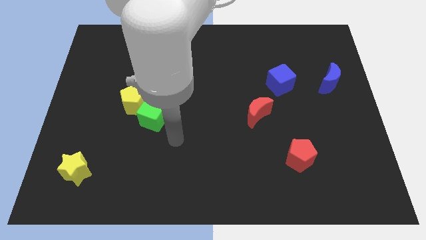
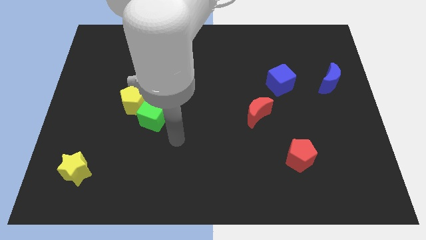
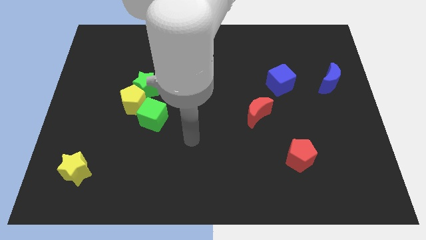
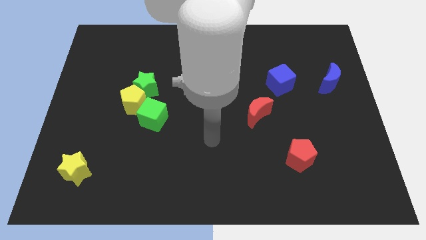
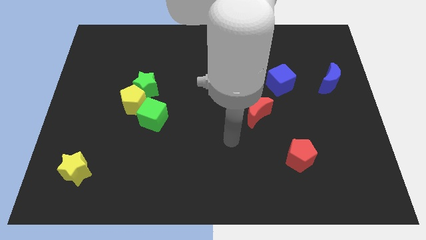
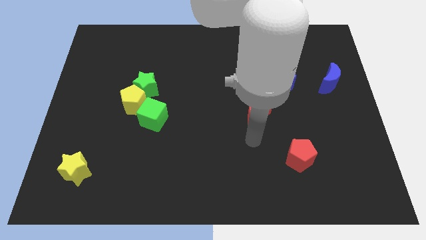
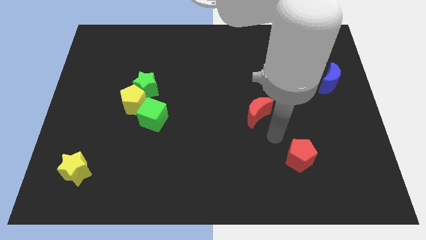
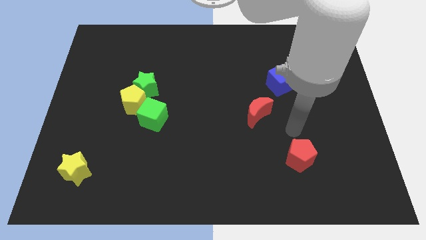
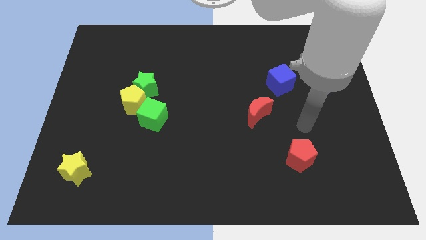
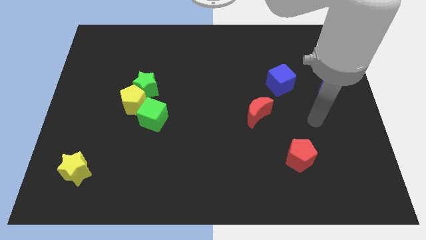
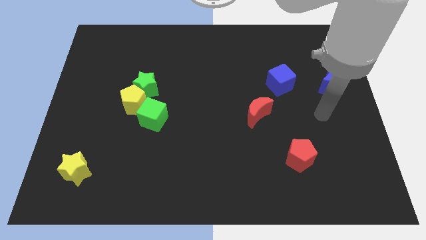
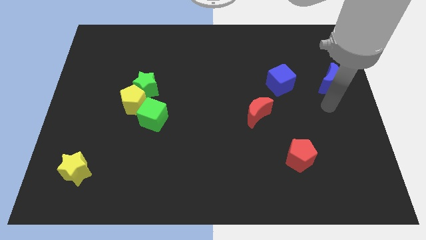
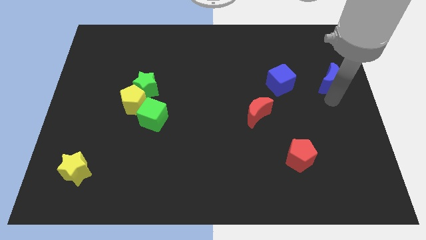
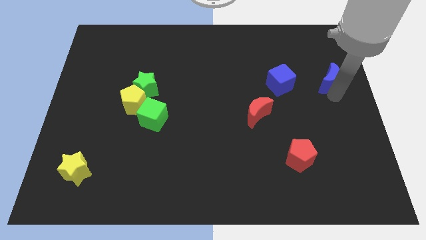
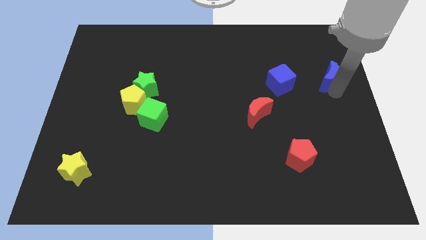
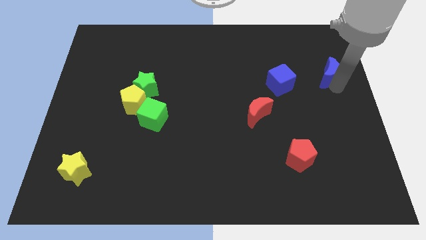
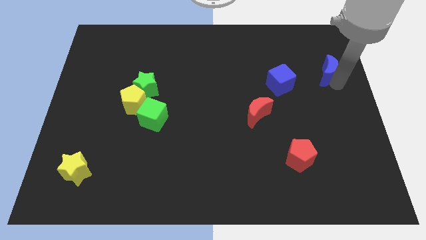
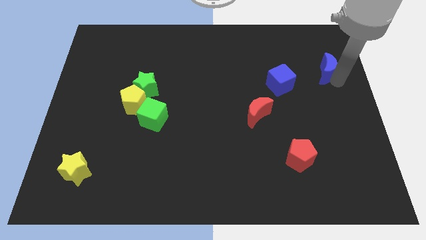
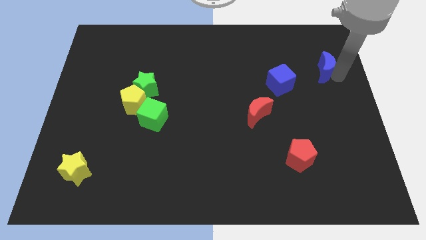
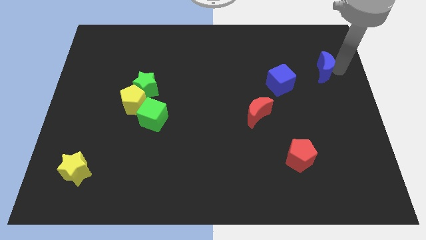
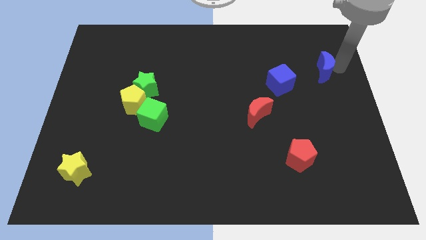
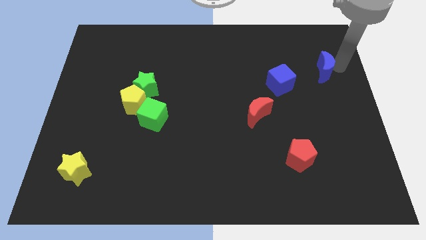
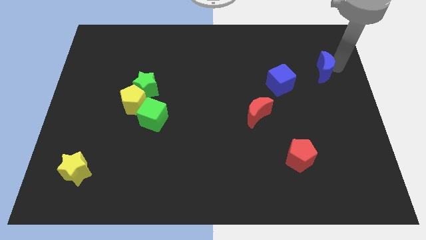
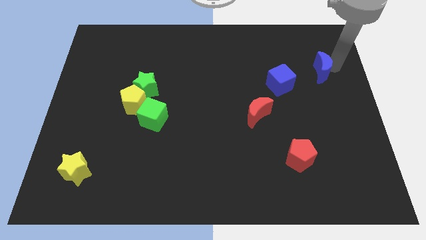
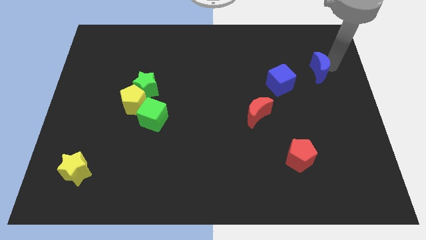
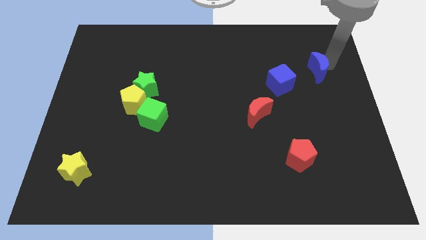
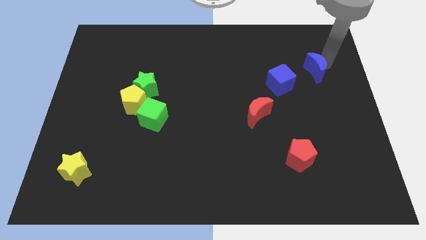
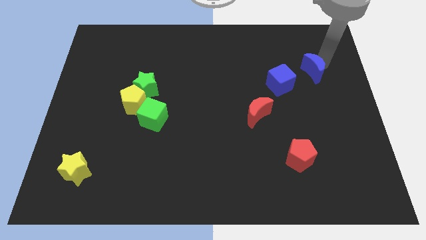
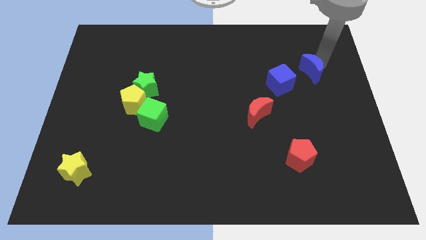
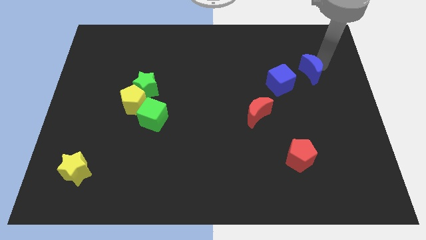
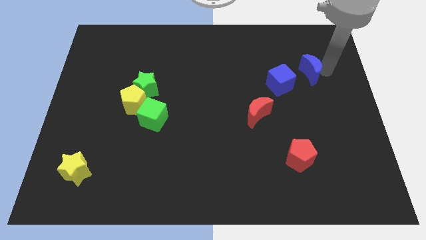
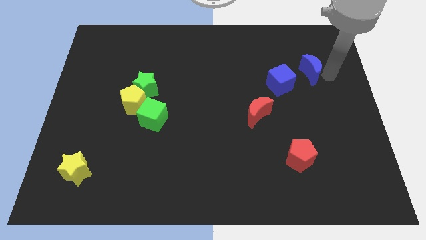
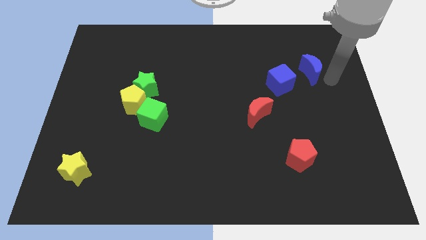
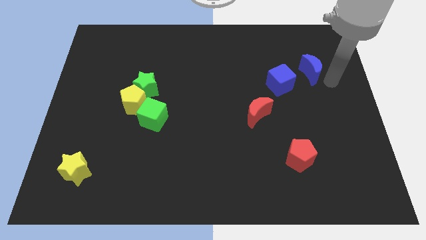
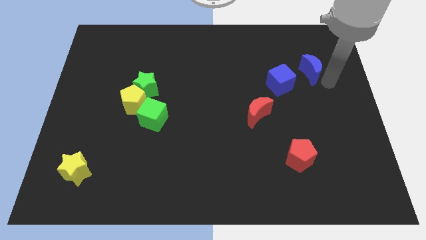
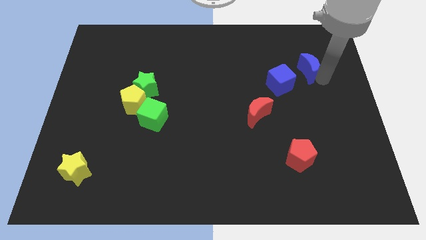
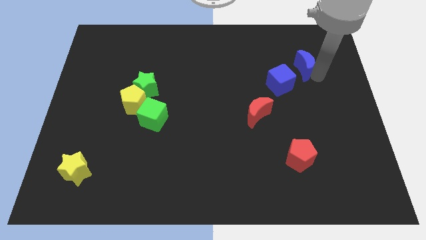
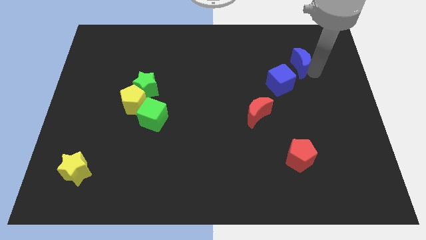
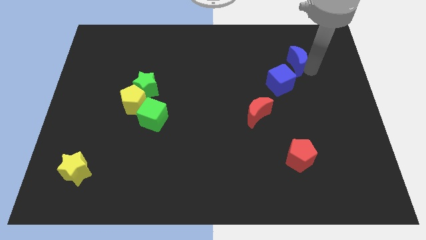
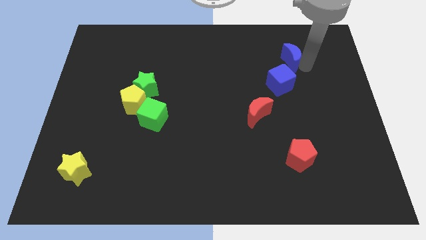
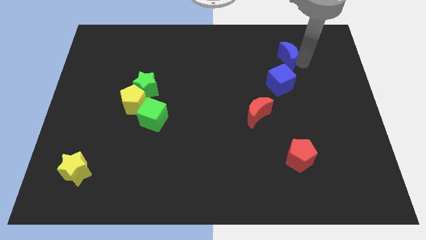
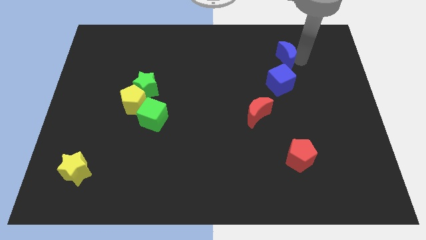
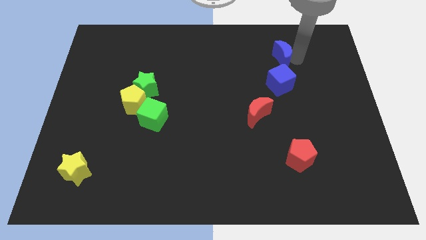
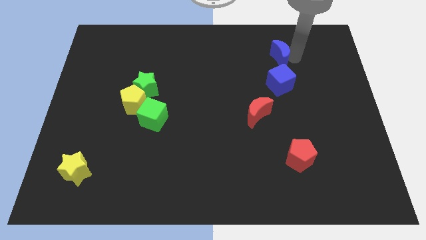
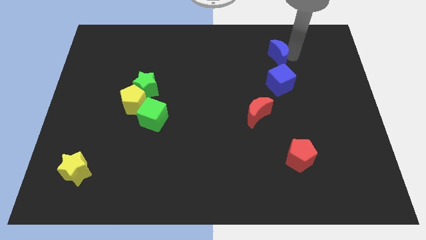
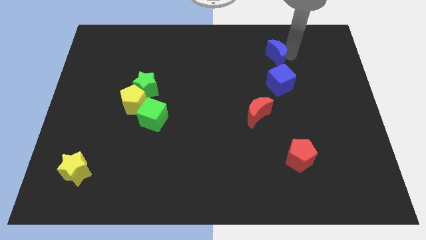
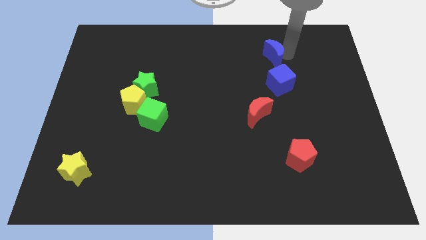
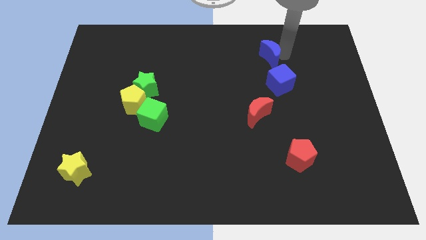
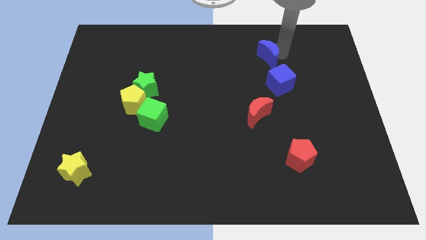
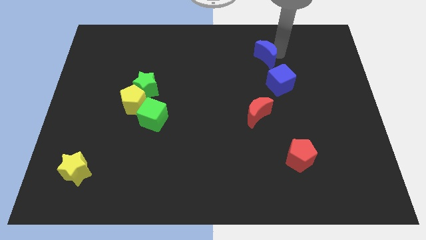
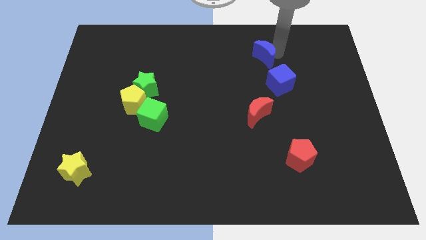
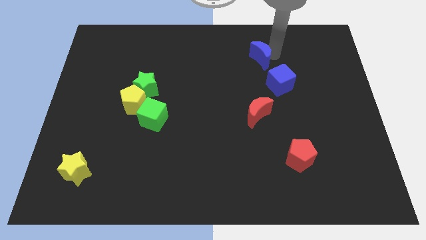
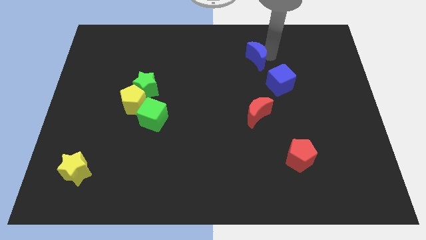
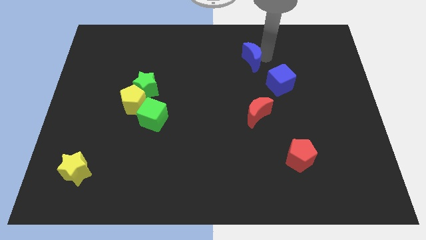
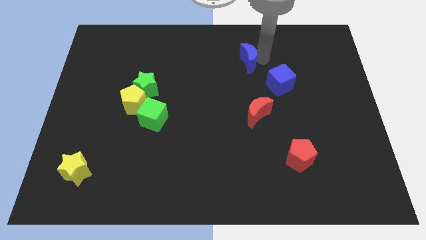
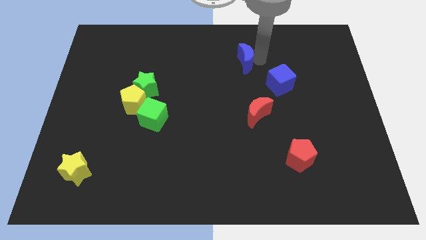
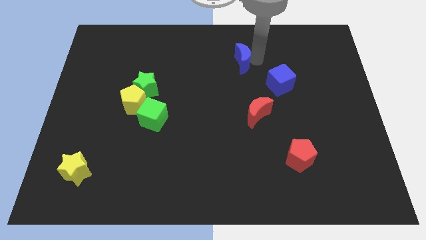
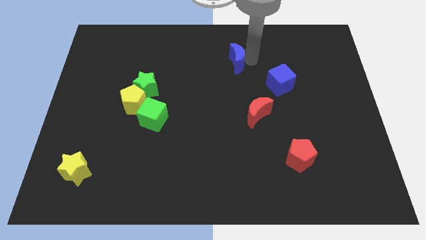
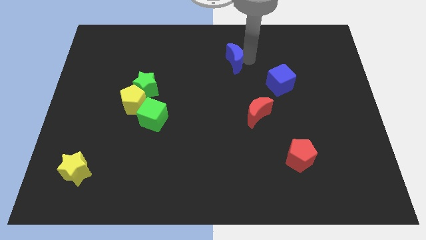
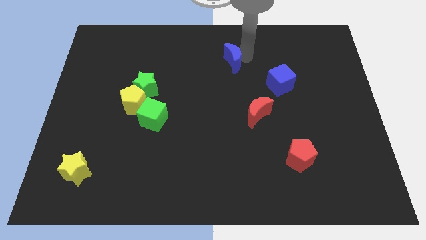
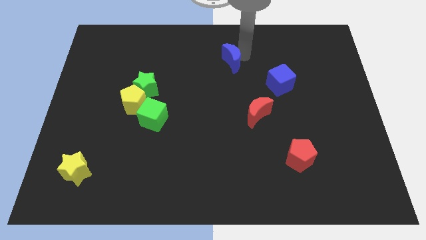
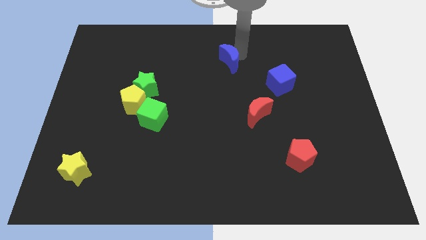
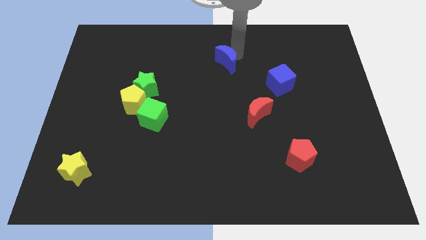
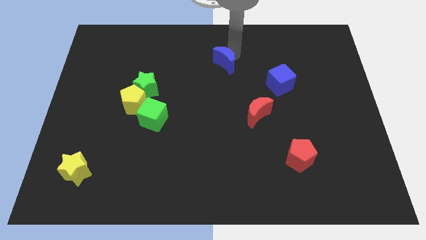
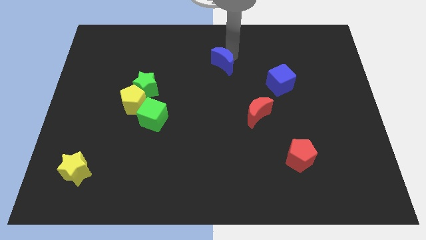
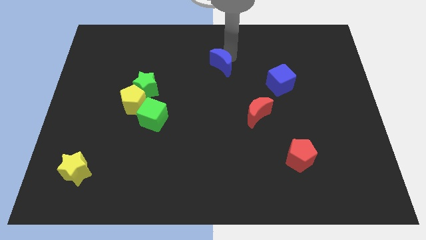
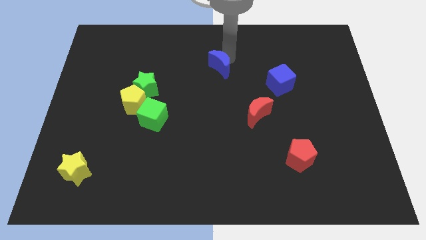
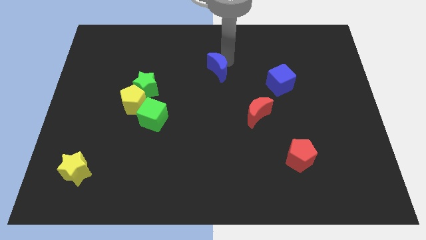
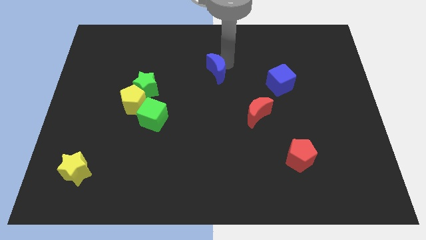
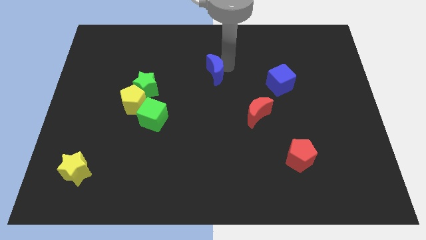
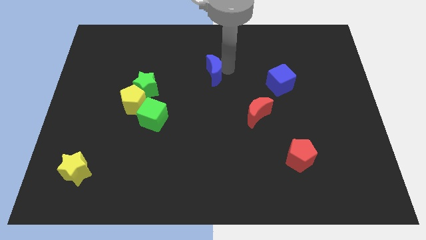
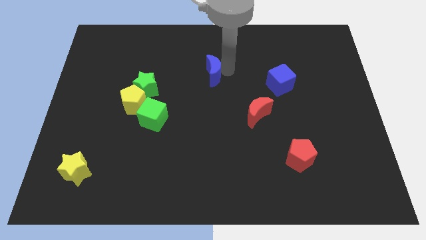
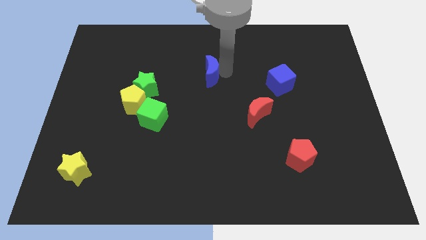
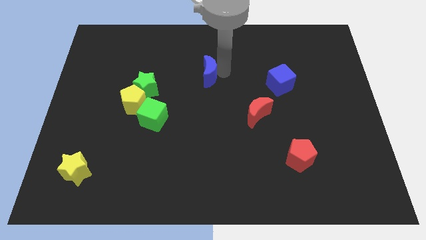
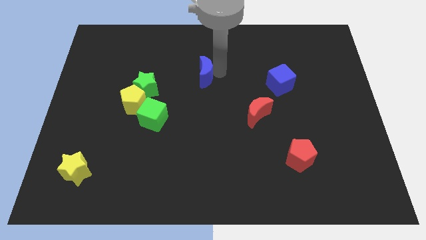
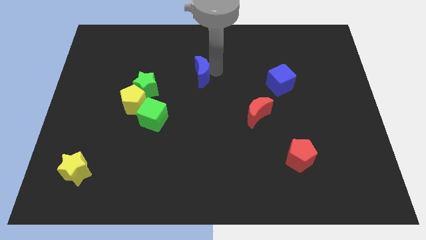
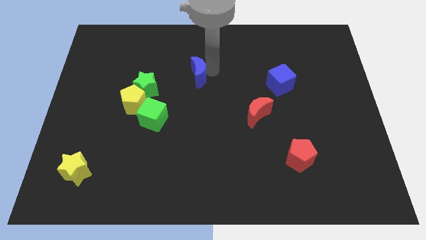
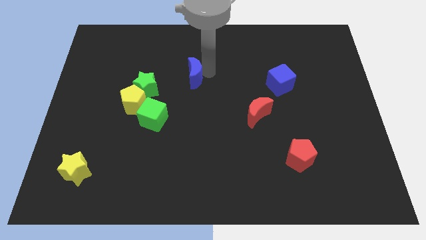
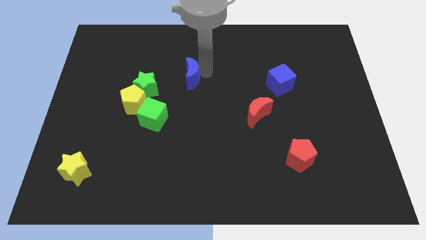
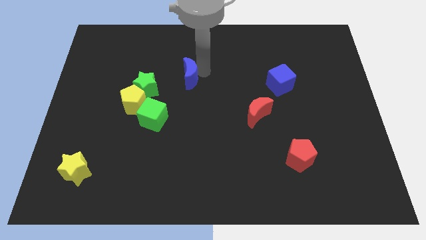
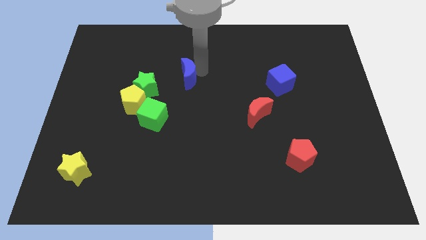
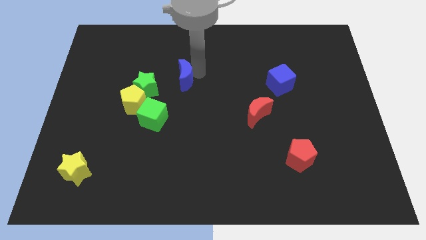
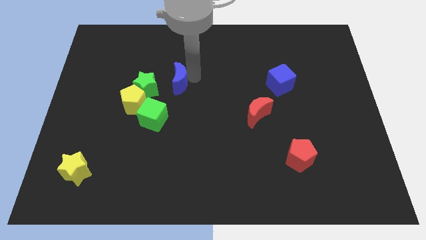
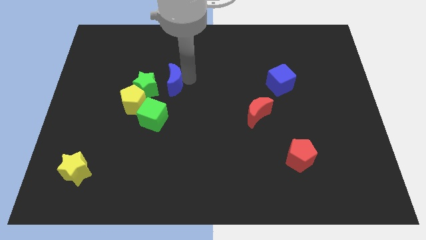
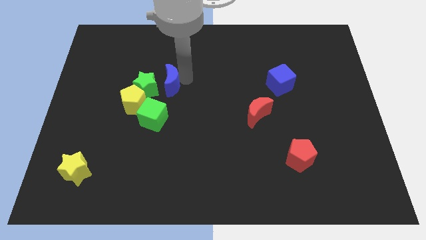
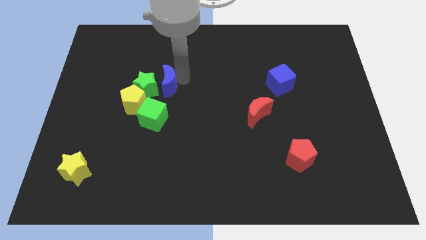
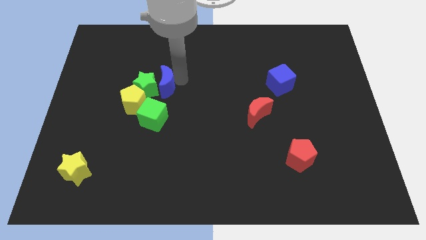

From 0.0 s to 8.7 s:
slide the blue moon to the green star
